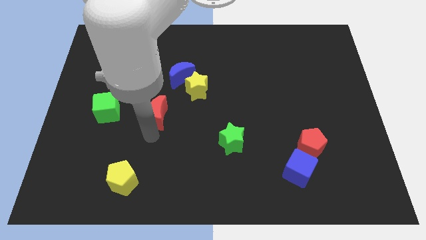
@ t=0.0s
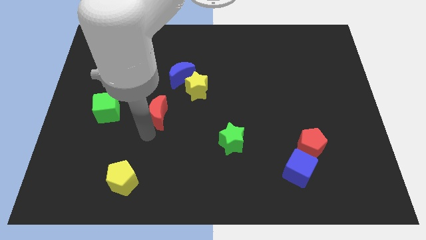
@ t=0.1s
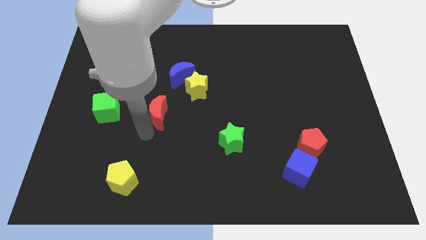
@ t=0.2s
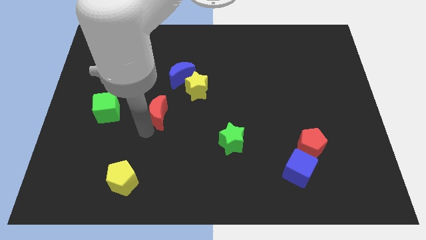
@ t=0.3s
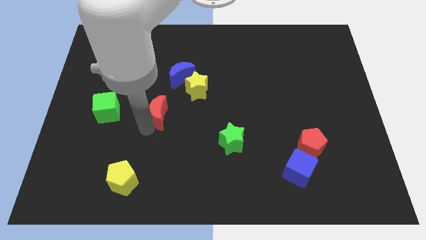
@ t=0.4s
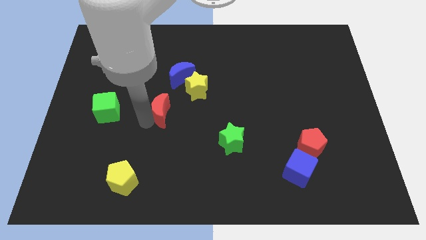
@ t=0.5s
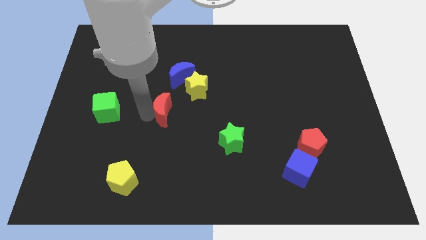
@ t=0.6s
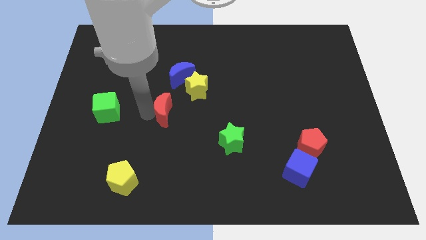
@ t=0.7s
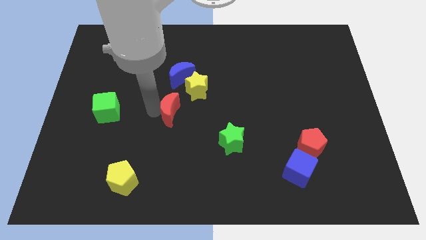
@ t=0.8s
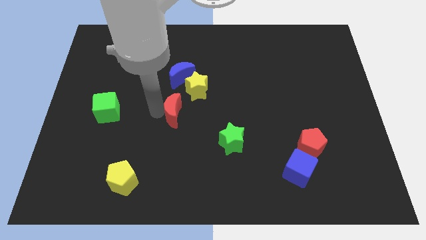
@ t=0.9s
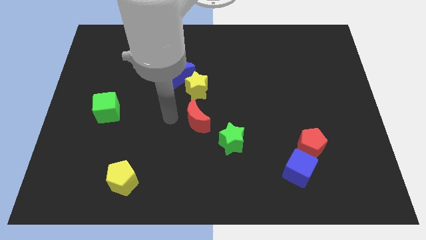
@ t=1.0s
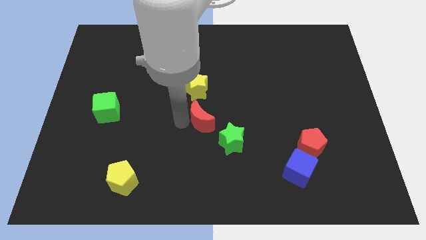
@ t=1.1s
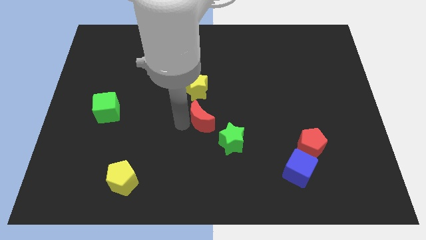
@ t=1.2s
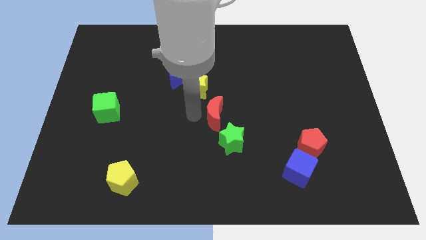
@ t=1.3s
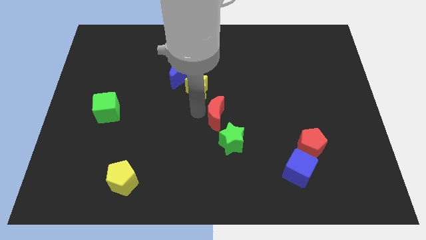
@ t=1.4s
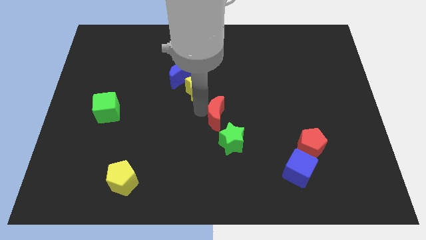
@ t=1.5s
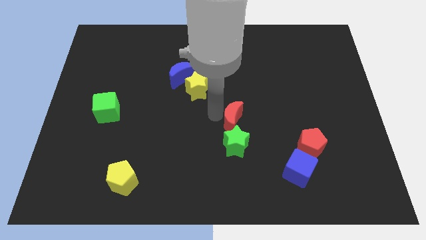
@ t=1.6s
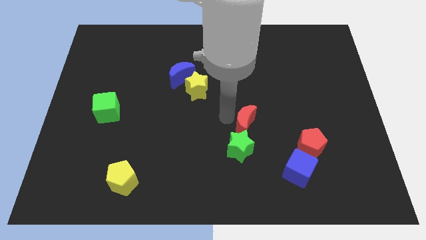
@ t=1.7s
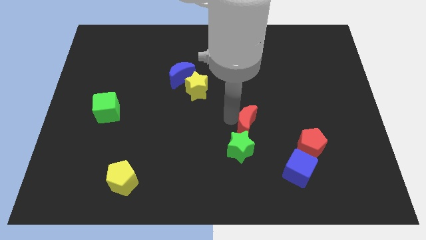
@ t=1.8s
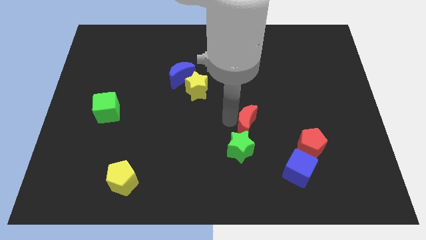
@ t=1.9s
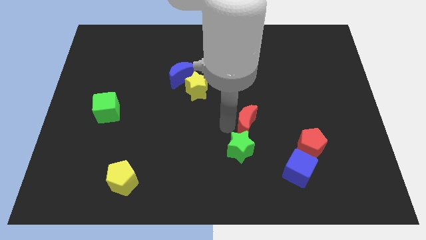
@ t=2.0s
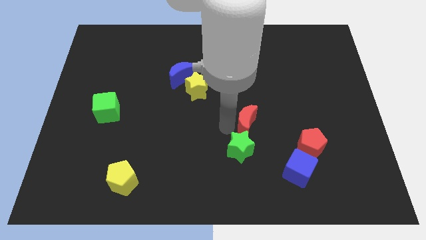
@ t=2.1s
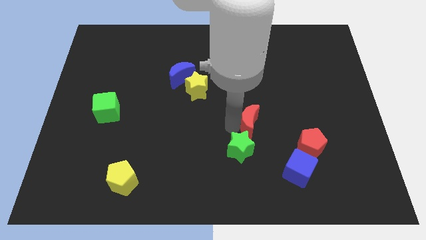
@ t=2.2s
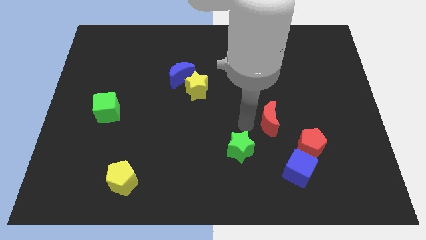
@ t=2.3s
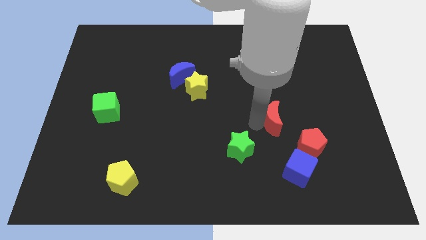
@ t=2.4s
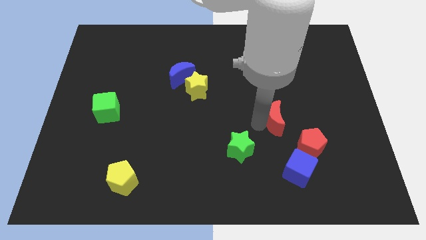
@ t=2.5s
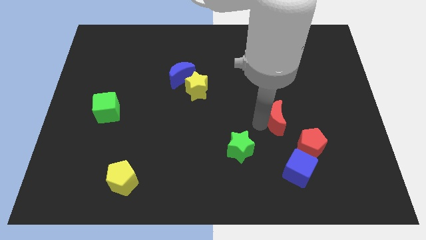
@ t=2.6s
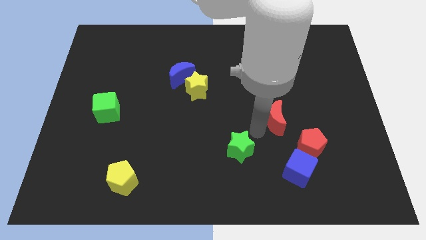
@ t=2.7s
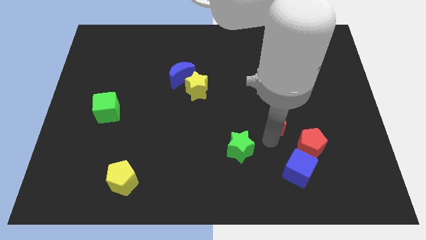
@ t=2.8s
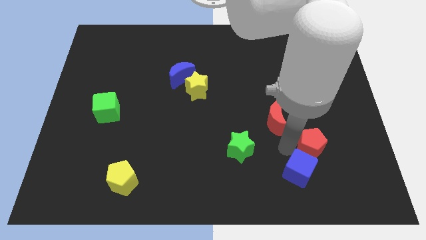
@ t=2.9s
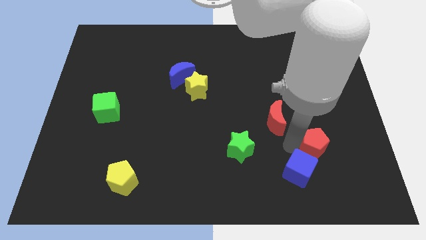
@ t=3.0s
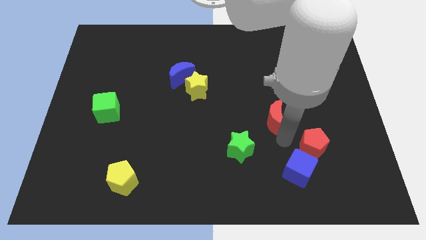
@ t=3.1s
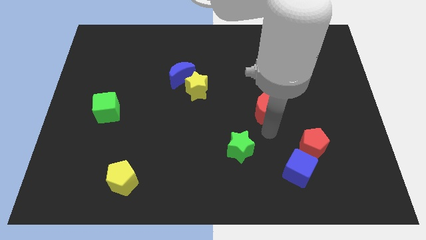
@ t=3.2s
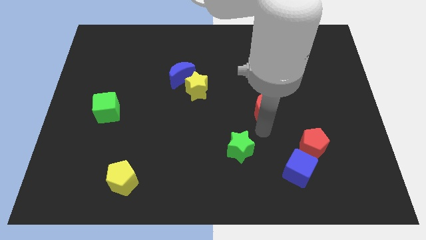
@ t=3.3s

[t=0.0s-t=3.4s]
place the red moon above the green star

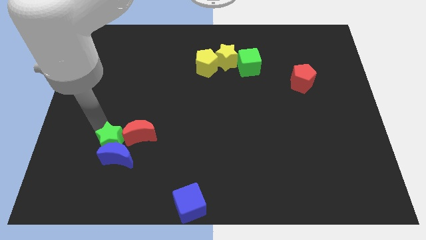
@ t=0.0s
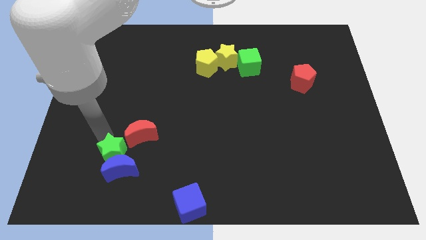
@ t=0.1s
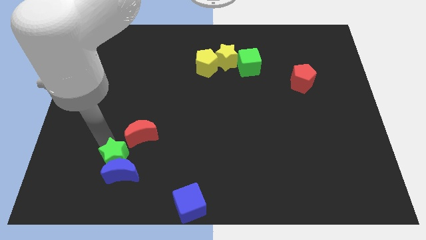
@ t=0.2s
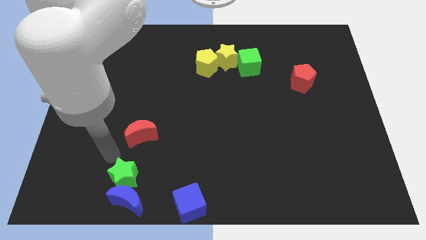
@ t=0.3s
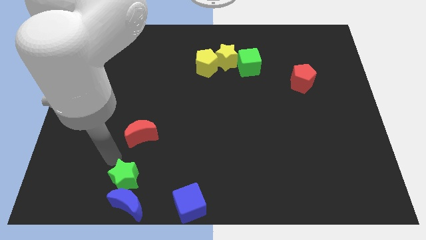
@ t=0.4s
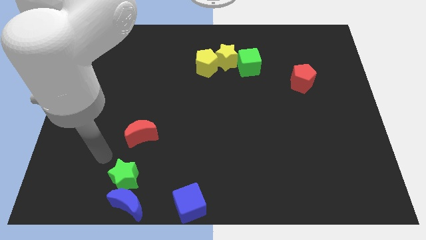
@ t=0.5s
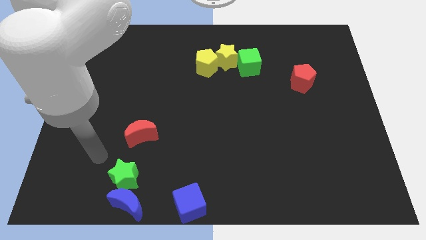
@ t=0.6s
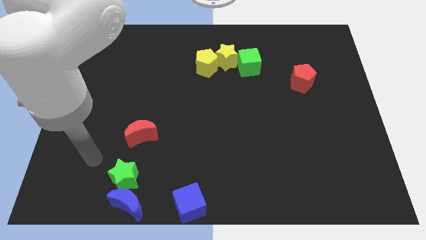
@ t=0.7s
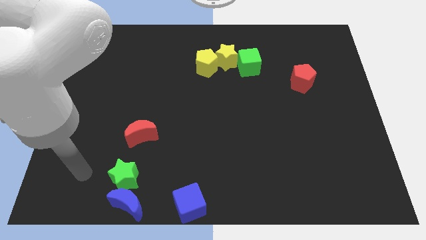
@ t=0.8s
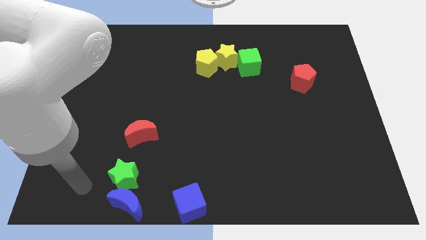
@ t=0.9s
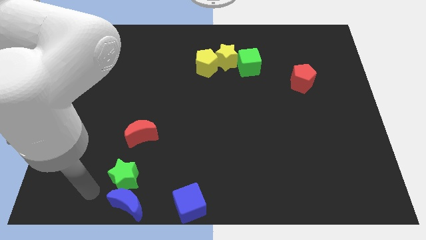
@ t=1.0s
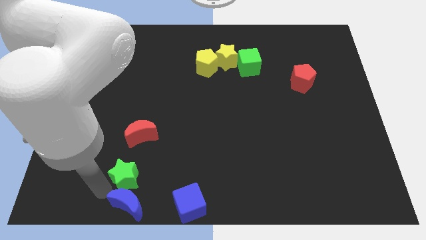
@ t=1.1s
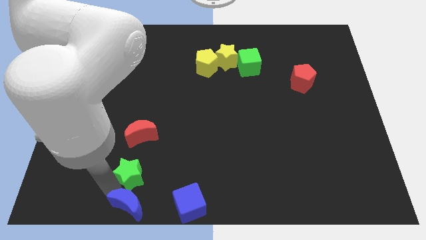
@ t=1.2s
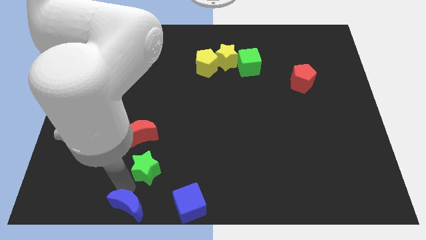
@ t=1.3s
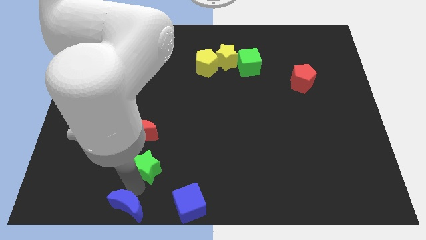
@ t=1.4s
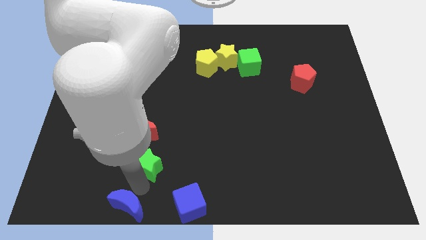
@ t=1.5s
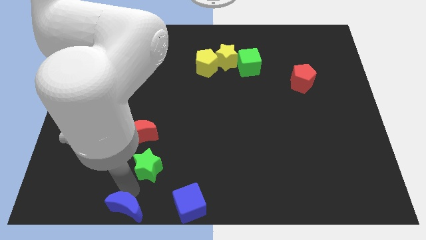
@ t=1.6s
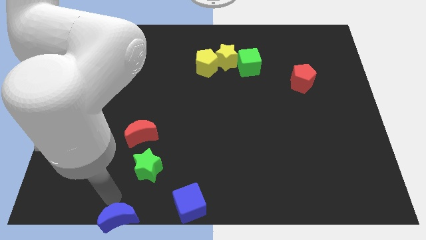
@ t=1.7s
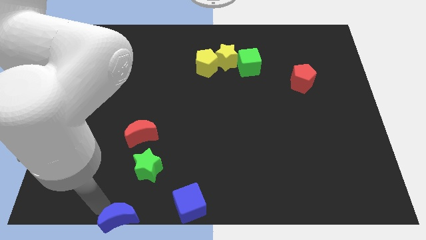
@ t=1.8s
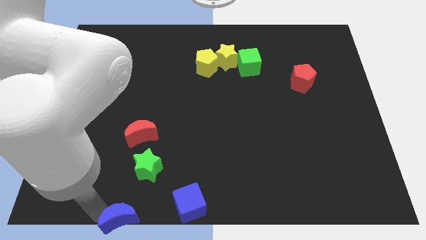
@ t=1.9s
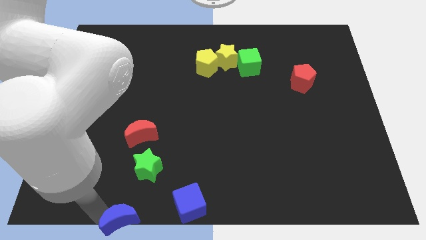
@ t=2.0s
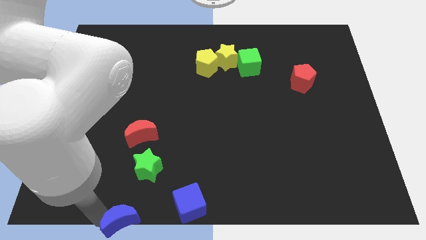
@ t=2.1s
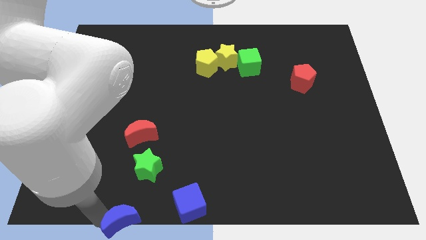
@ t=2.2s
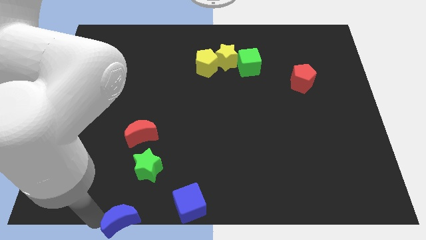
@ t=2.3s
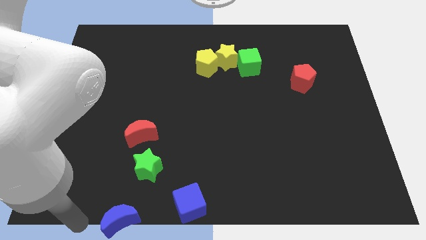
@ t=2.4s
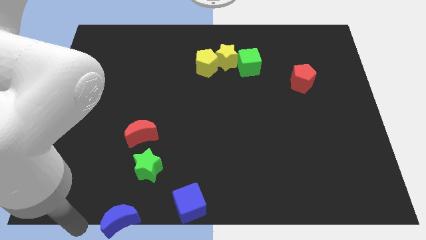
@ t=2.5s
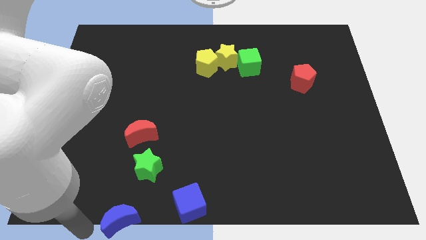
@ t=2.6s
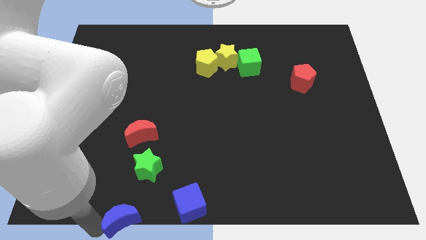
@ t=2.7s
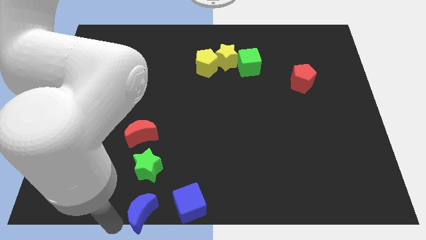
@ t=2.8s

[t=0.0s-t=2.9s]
push the green star into the blue crescent

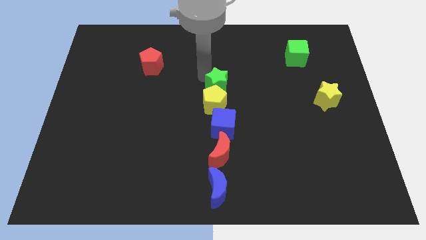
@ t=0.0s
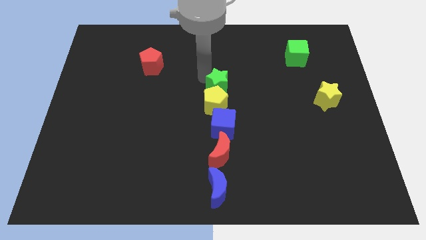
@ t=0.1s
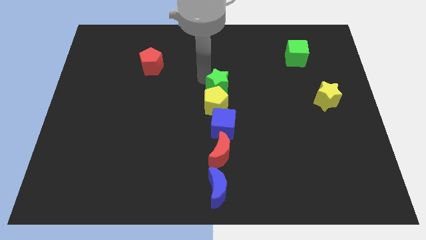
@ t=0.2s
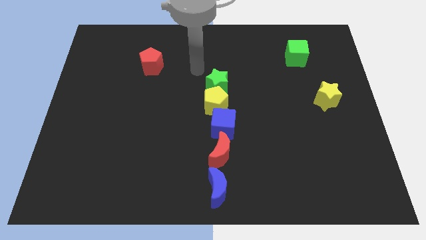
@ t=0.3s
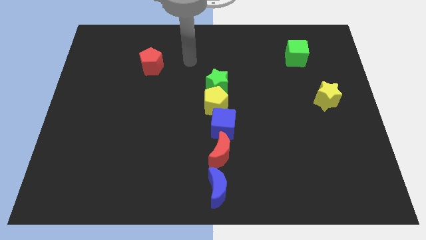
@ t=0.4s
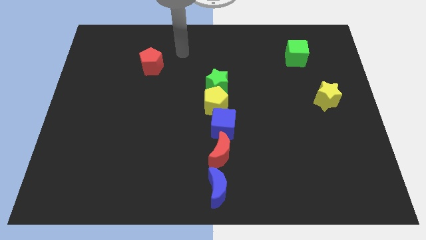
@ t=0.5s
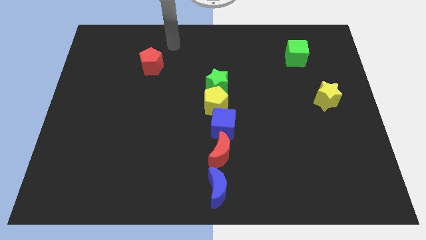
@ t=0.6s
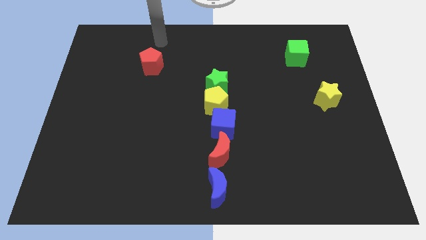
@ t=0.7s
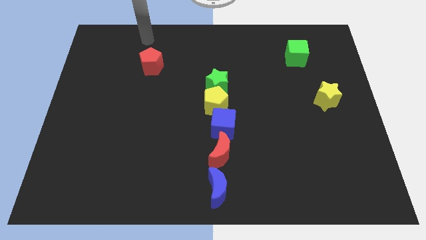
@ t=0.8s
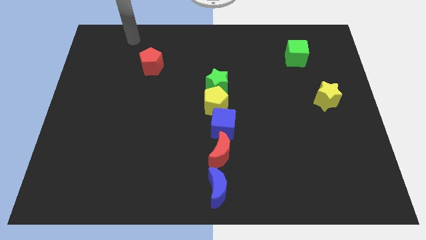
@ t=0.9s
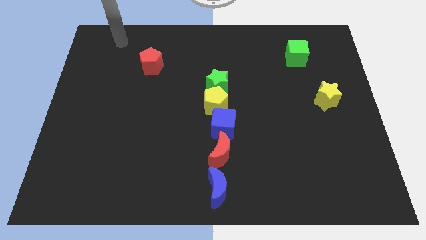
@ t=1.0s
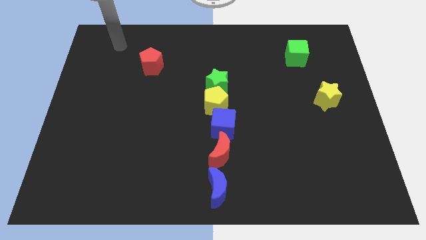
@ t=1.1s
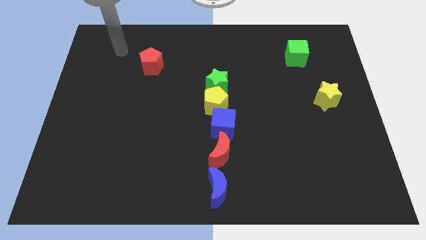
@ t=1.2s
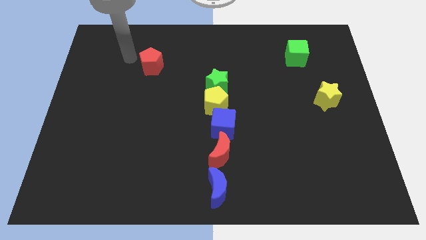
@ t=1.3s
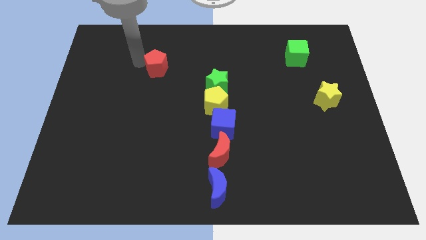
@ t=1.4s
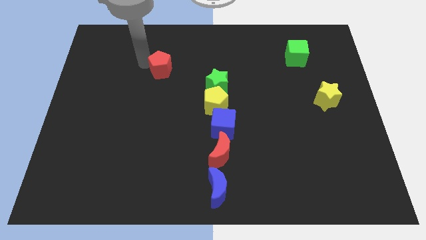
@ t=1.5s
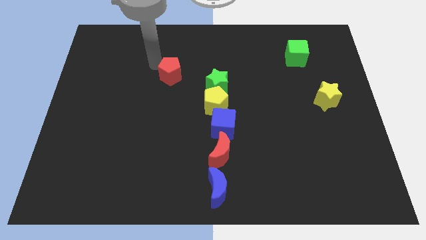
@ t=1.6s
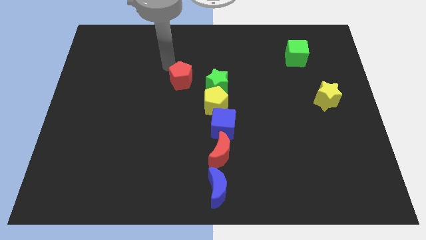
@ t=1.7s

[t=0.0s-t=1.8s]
move the red pentagon diagonally top left to green star

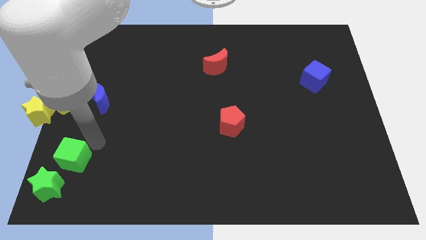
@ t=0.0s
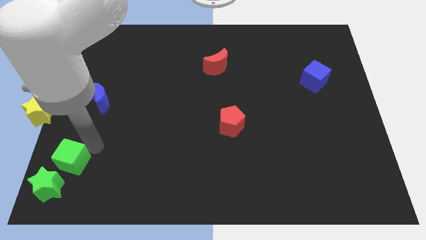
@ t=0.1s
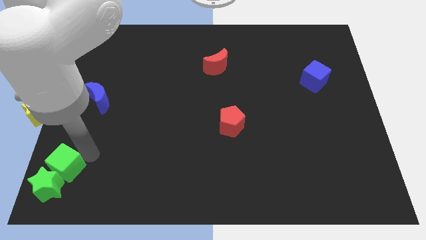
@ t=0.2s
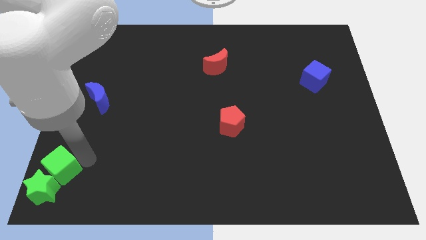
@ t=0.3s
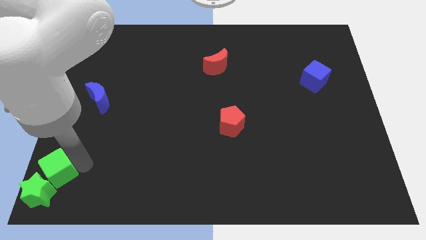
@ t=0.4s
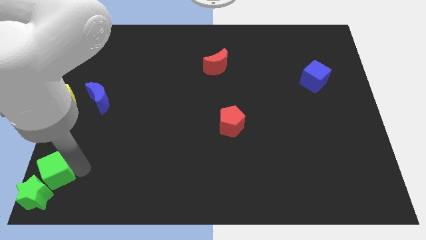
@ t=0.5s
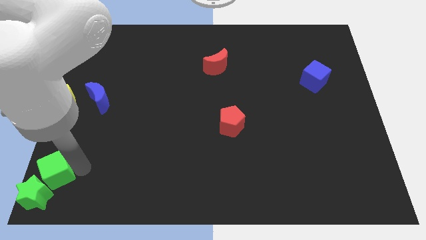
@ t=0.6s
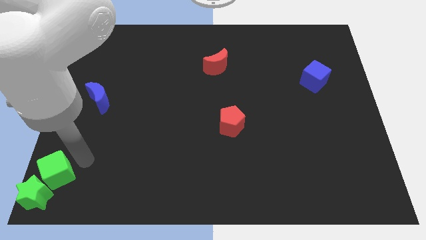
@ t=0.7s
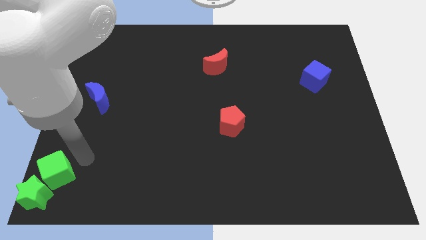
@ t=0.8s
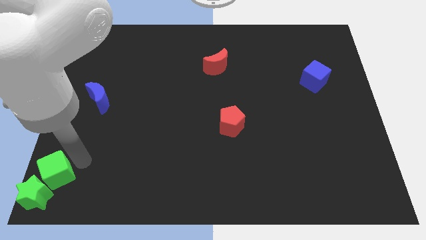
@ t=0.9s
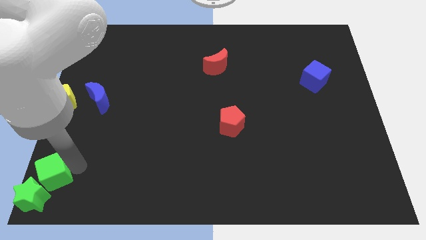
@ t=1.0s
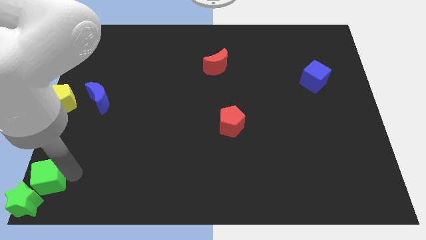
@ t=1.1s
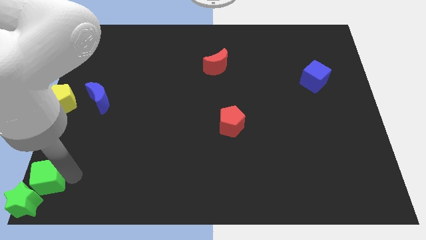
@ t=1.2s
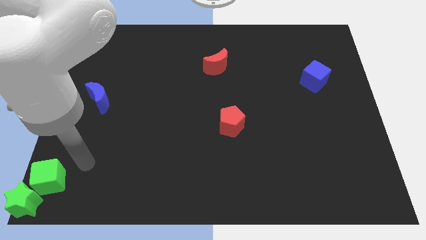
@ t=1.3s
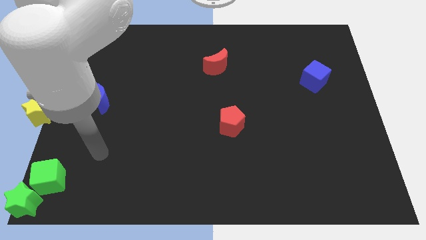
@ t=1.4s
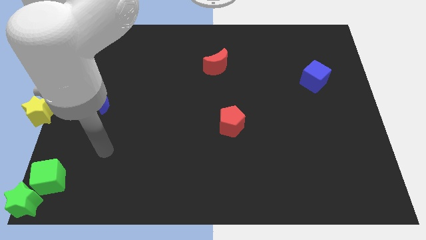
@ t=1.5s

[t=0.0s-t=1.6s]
arrange the green blocks at the bottom left of board
